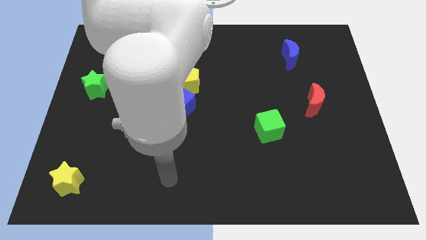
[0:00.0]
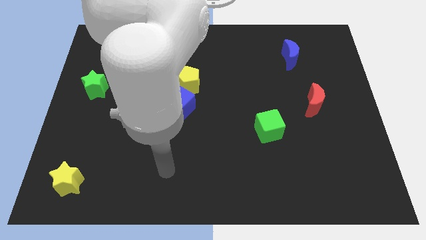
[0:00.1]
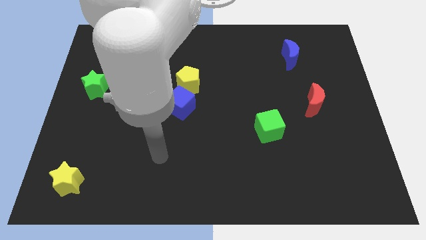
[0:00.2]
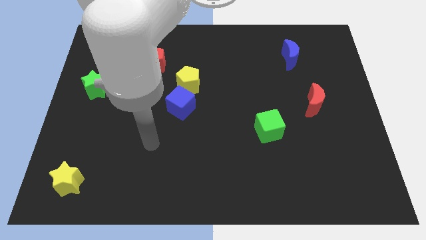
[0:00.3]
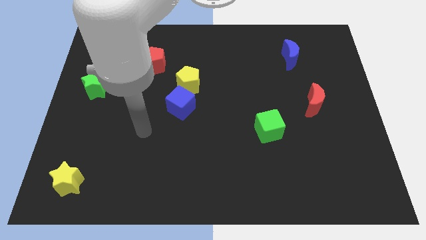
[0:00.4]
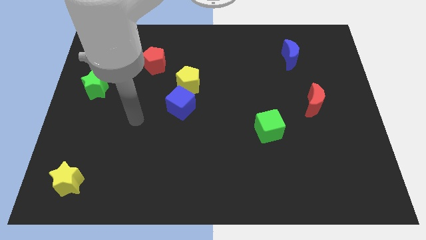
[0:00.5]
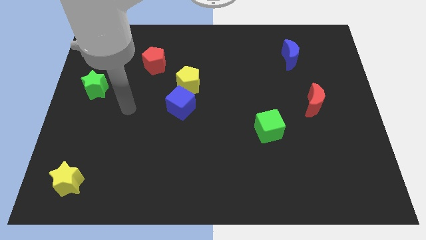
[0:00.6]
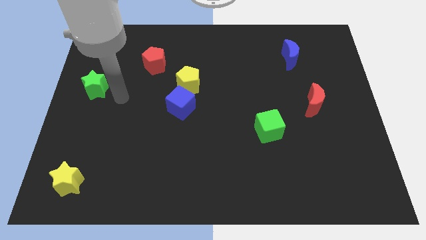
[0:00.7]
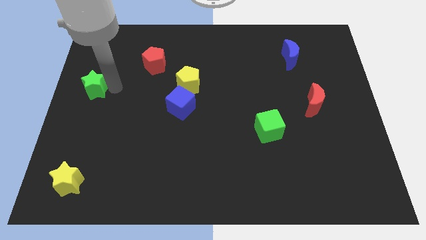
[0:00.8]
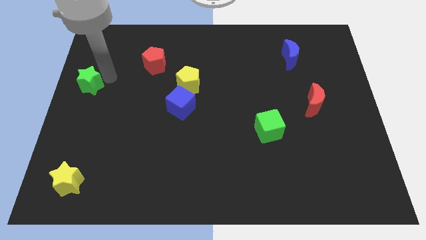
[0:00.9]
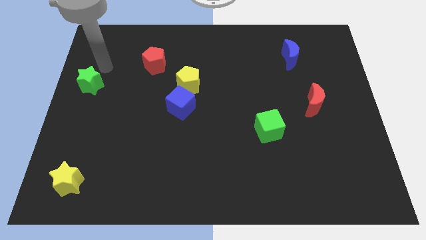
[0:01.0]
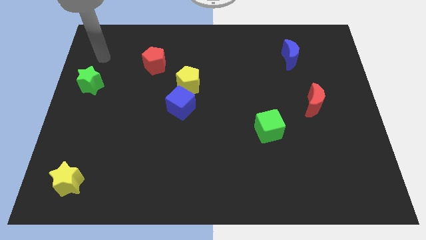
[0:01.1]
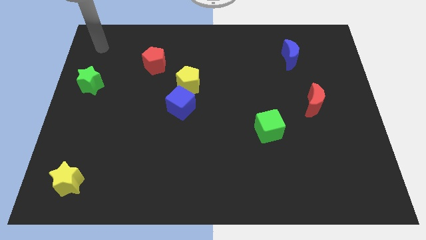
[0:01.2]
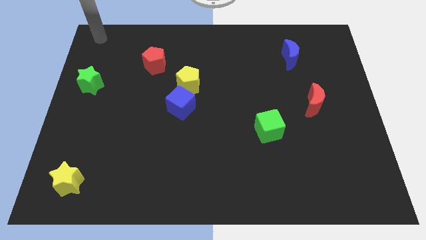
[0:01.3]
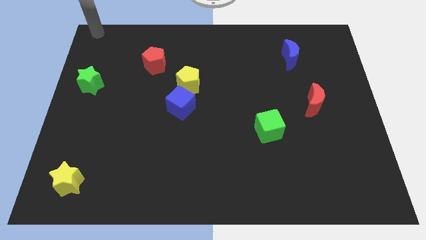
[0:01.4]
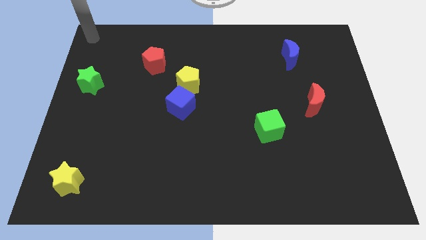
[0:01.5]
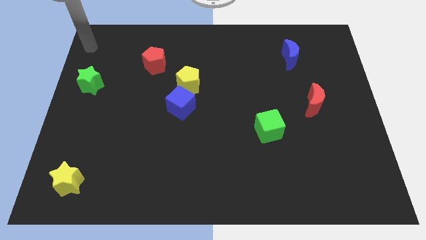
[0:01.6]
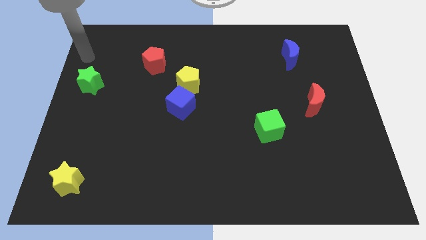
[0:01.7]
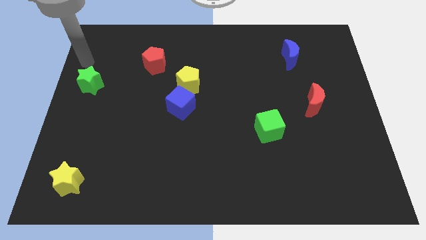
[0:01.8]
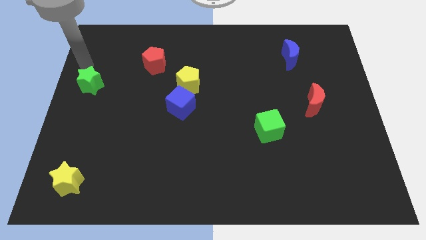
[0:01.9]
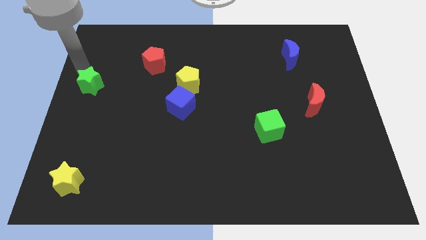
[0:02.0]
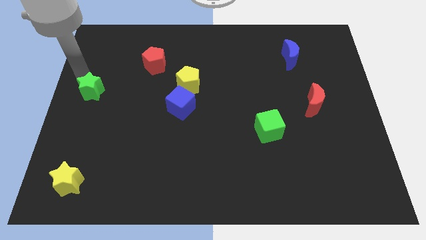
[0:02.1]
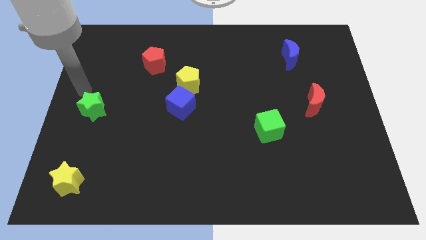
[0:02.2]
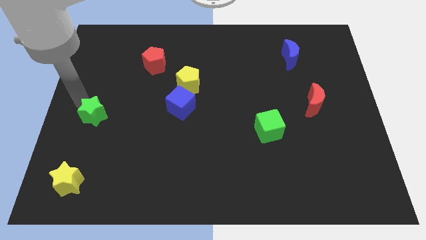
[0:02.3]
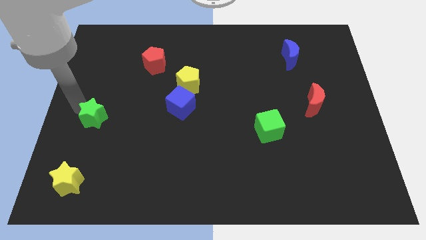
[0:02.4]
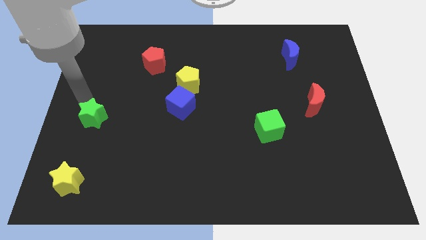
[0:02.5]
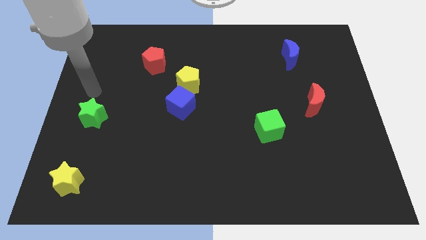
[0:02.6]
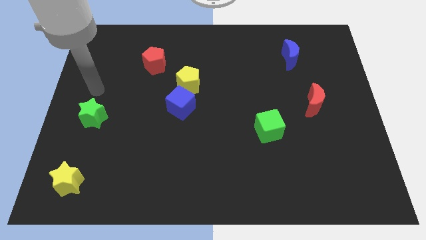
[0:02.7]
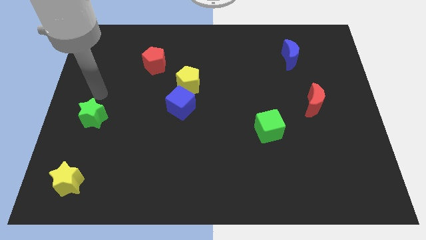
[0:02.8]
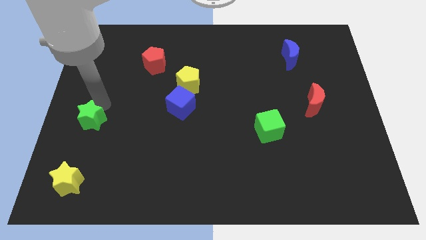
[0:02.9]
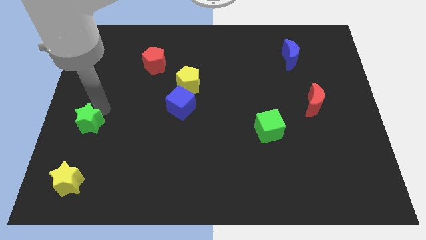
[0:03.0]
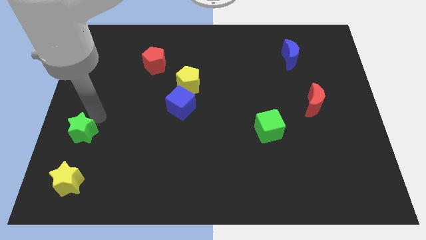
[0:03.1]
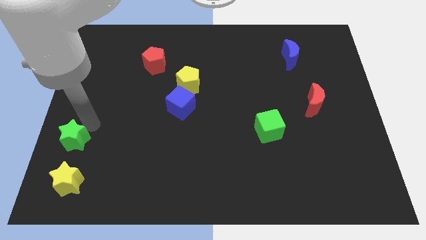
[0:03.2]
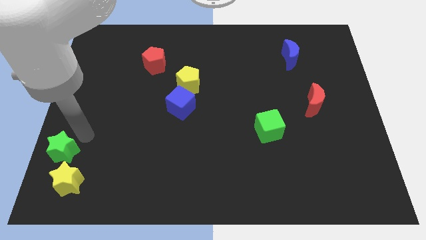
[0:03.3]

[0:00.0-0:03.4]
push the green star to the top of the yellow star

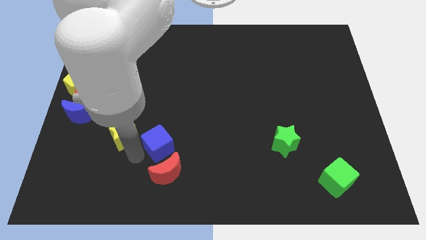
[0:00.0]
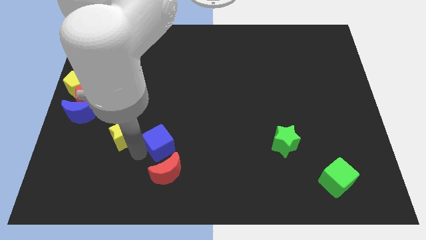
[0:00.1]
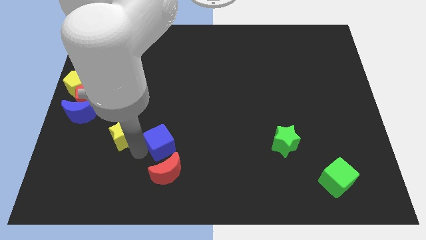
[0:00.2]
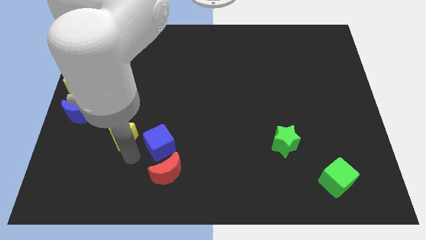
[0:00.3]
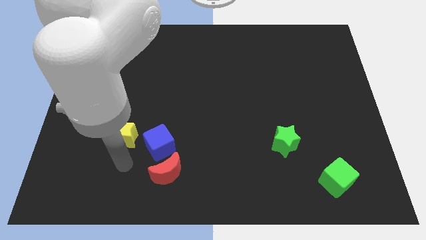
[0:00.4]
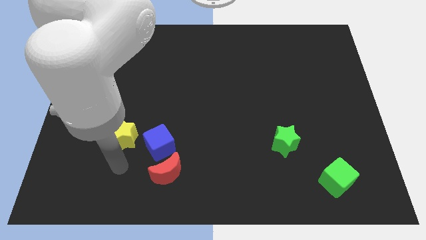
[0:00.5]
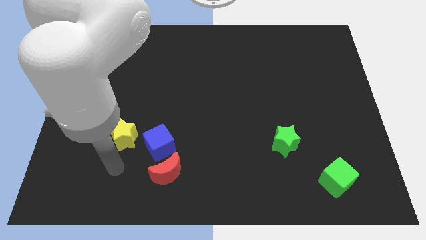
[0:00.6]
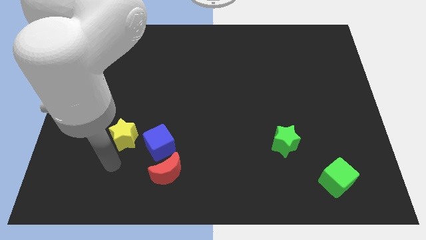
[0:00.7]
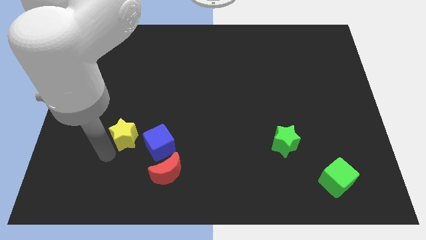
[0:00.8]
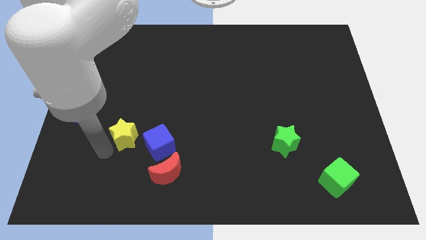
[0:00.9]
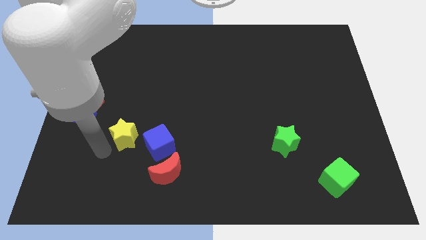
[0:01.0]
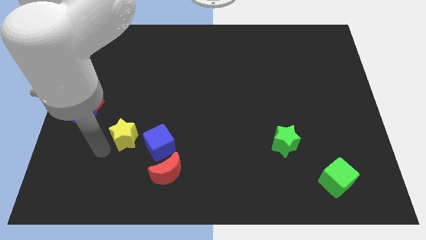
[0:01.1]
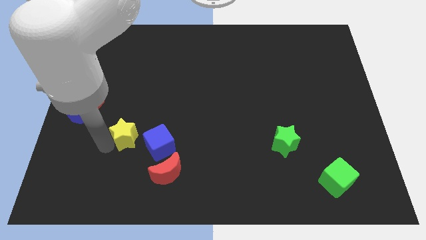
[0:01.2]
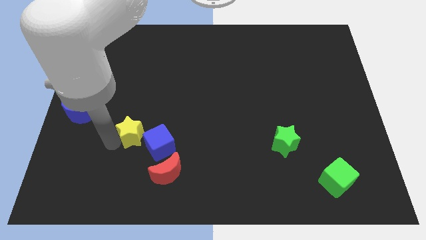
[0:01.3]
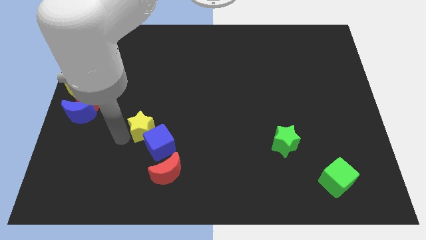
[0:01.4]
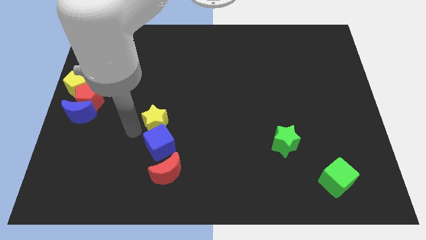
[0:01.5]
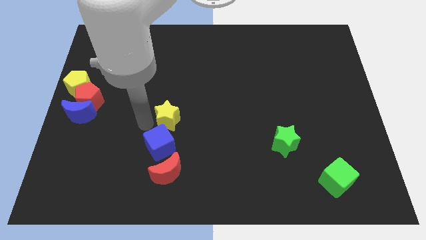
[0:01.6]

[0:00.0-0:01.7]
arrange yellow starblue cube and red moon in a vertical line

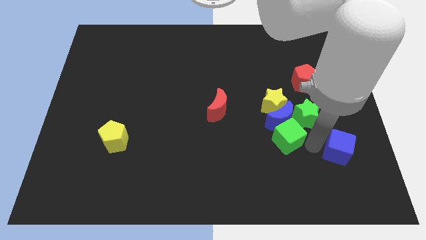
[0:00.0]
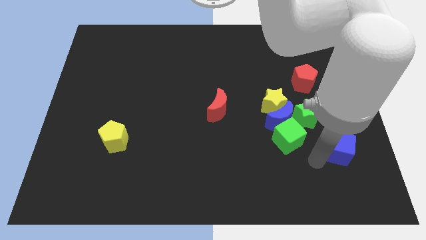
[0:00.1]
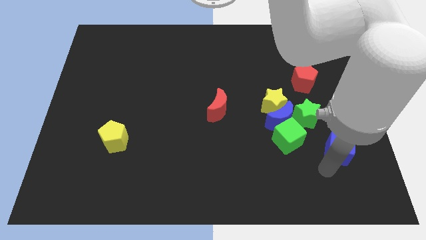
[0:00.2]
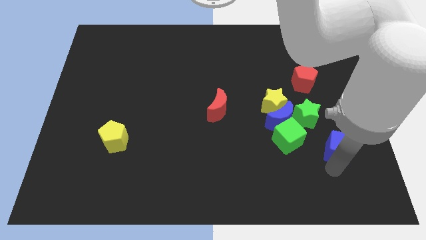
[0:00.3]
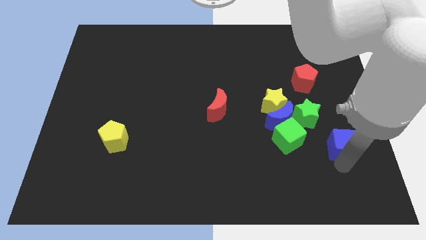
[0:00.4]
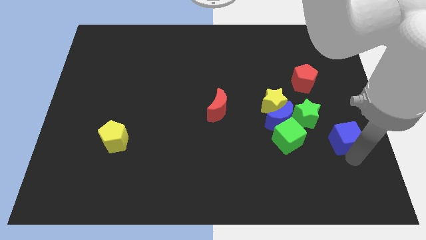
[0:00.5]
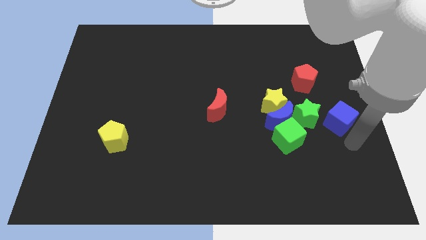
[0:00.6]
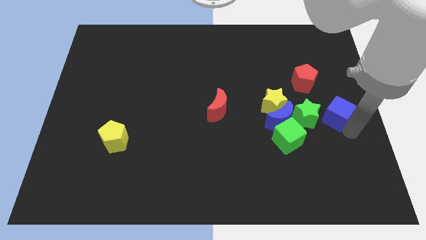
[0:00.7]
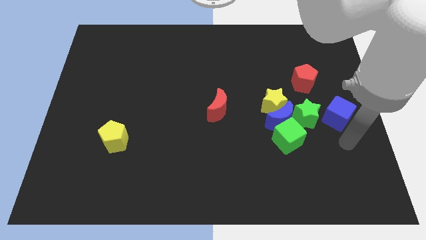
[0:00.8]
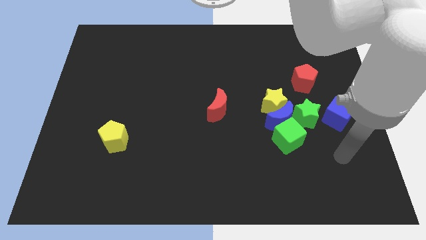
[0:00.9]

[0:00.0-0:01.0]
move the blue cube to the right of the green star

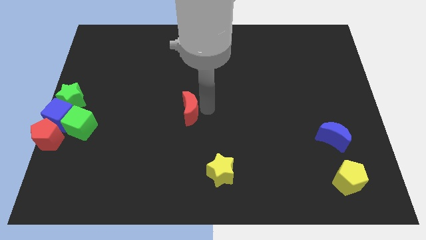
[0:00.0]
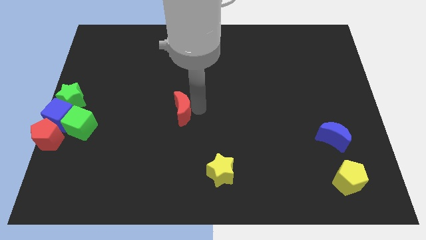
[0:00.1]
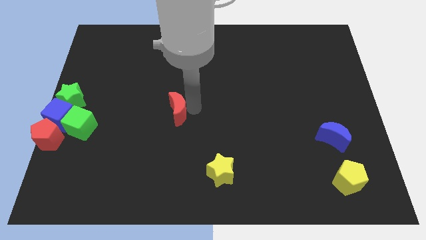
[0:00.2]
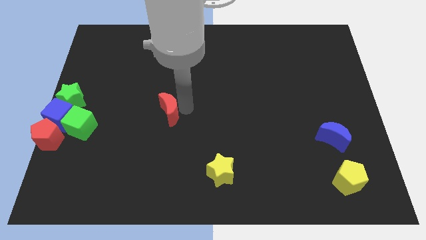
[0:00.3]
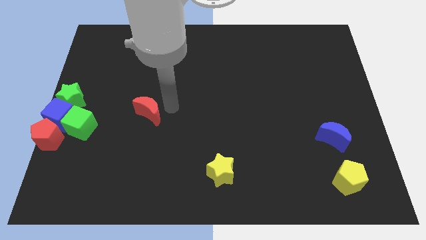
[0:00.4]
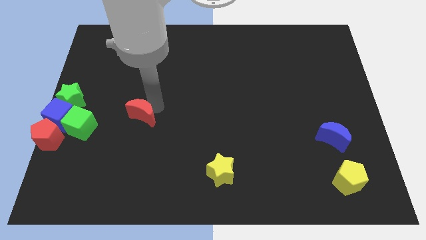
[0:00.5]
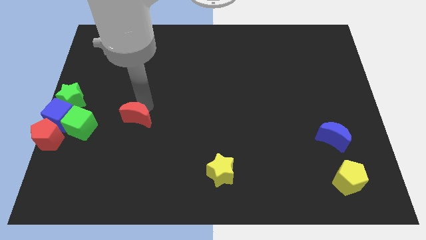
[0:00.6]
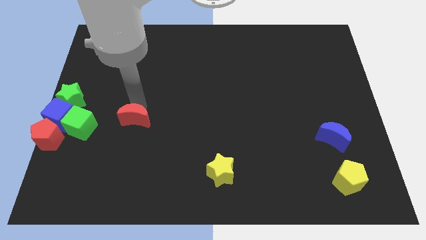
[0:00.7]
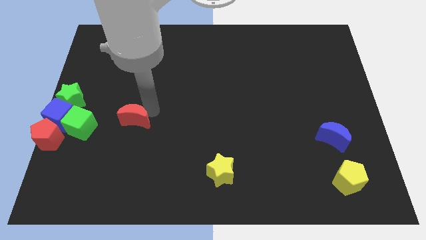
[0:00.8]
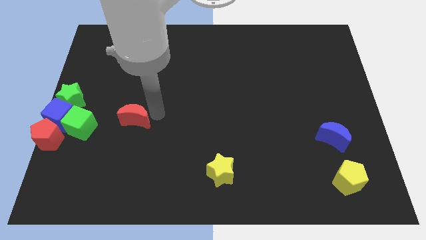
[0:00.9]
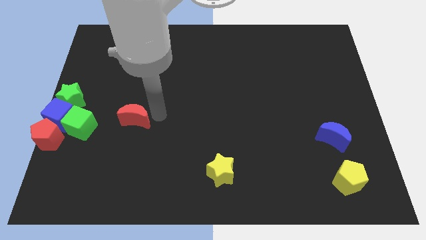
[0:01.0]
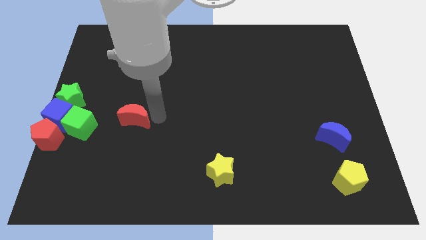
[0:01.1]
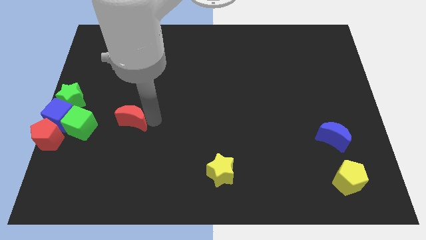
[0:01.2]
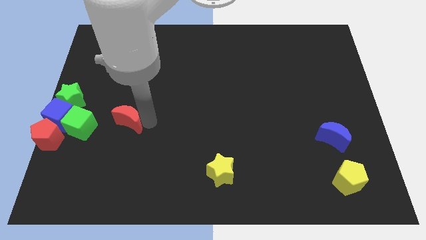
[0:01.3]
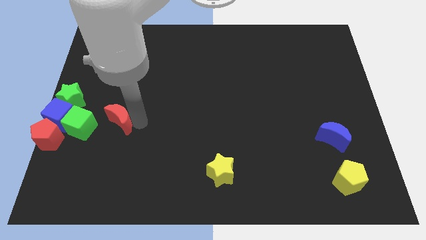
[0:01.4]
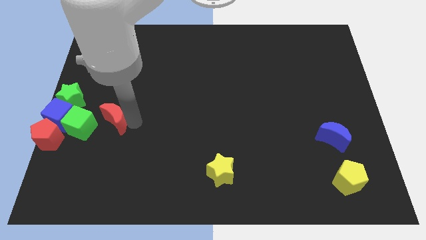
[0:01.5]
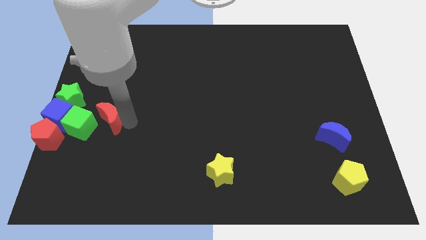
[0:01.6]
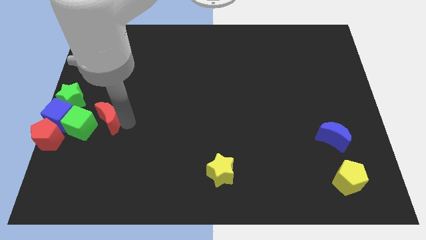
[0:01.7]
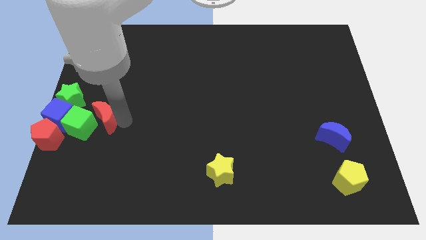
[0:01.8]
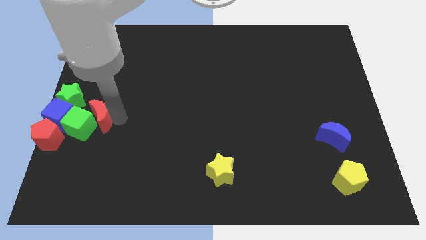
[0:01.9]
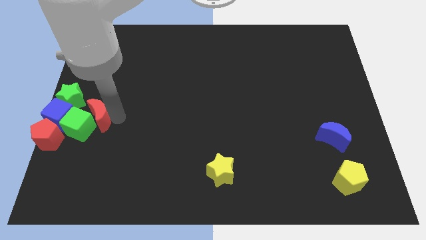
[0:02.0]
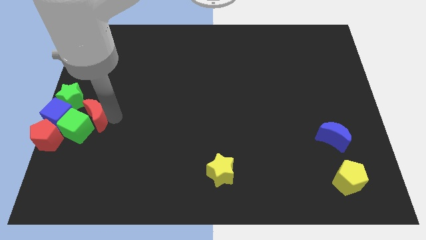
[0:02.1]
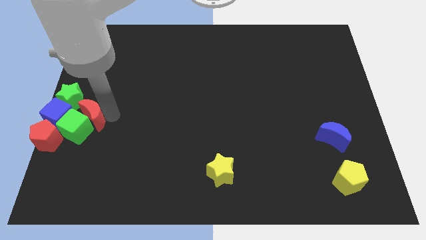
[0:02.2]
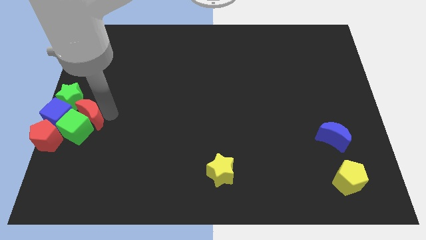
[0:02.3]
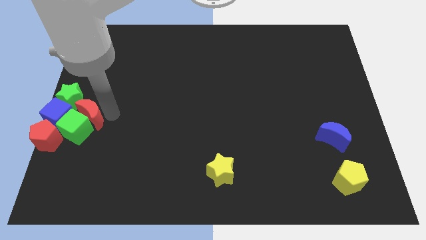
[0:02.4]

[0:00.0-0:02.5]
move the red crescent on top of the green cube

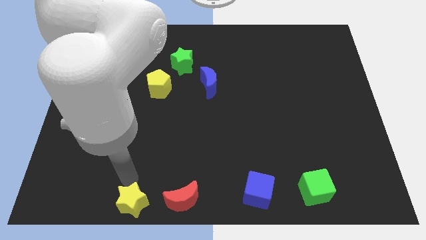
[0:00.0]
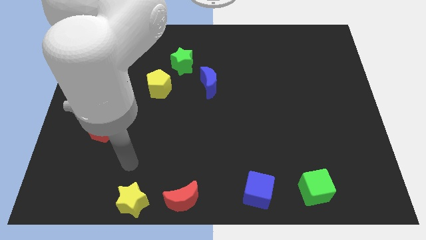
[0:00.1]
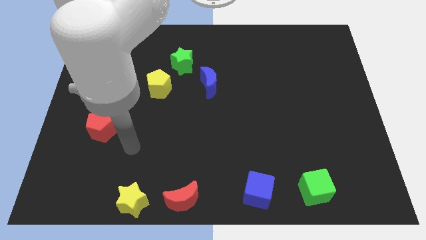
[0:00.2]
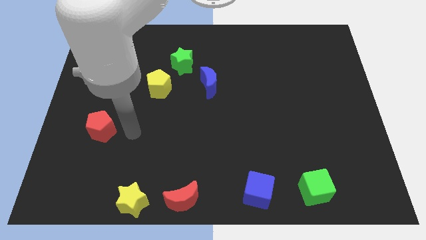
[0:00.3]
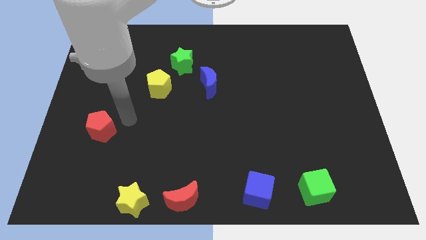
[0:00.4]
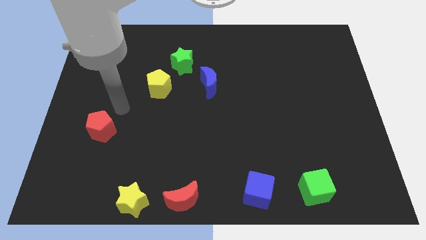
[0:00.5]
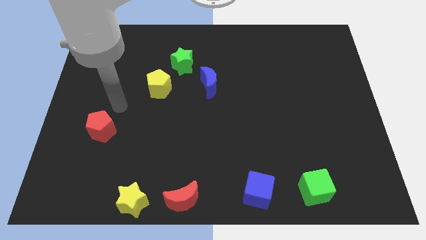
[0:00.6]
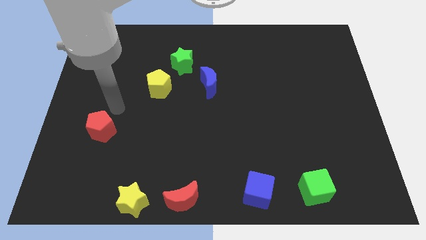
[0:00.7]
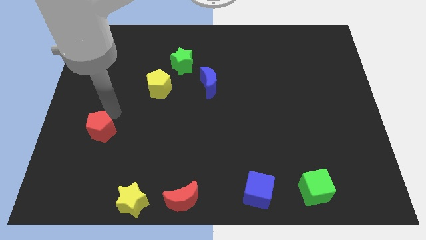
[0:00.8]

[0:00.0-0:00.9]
move your arm away from yellow star
